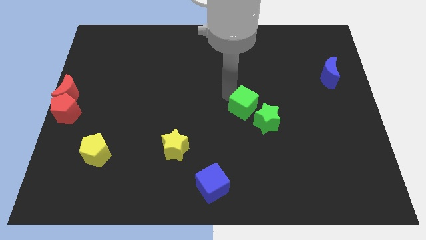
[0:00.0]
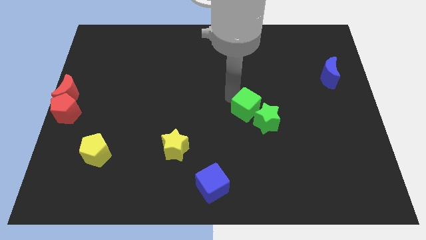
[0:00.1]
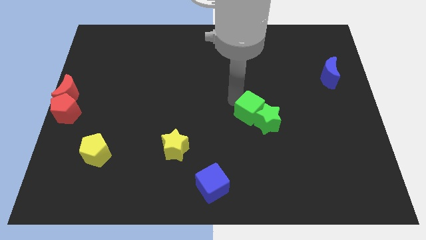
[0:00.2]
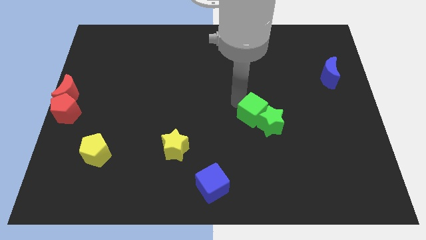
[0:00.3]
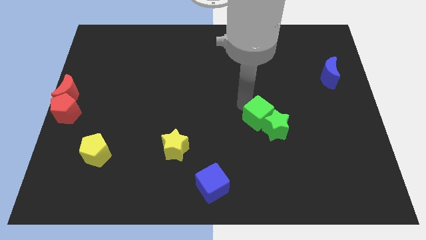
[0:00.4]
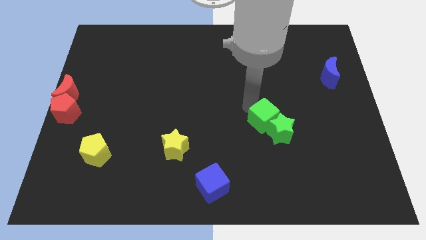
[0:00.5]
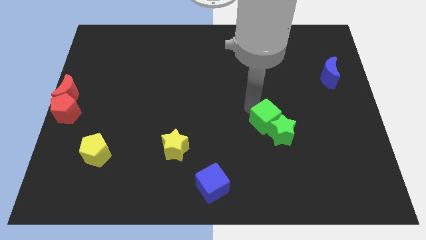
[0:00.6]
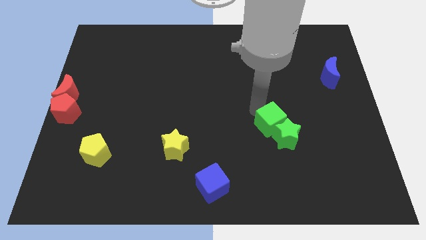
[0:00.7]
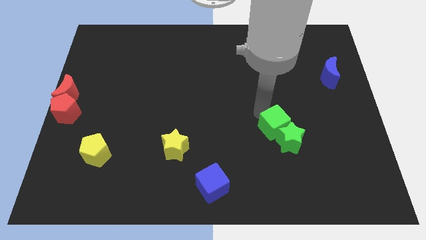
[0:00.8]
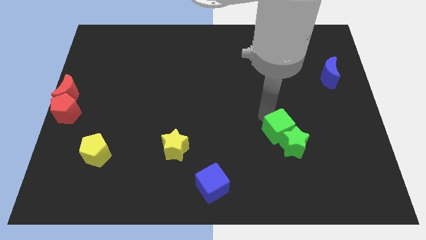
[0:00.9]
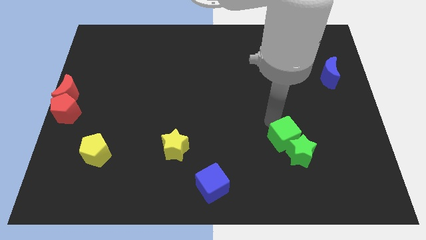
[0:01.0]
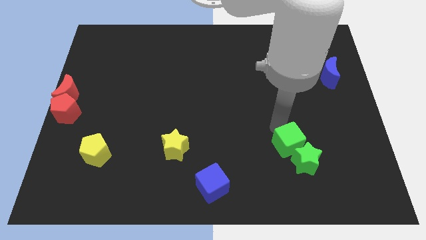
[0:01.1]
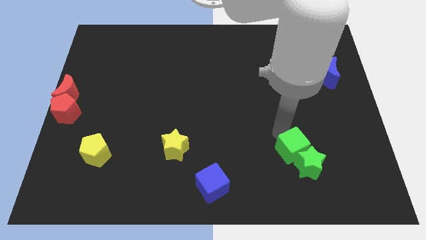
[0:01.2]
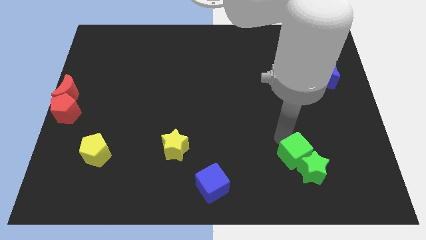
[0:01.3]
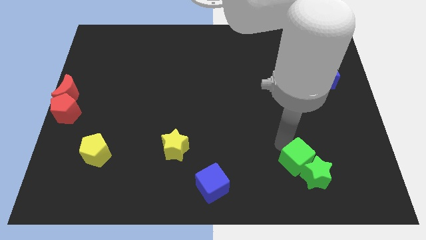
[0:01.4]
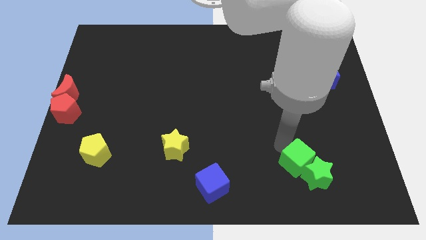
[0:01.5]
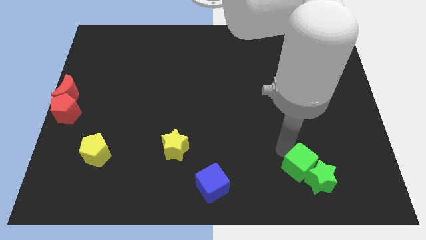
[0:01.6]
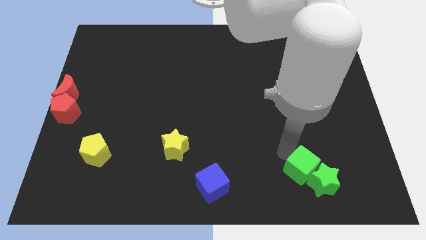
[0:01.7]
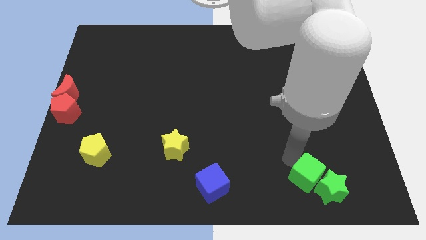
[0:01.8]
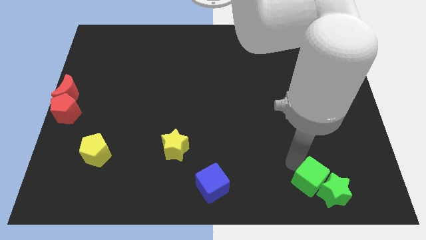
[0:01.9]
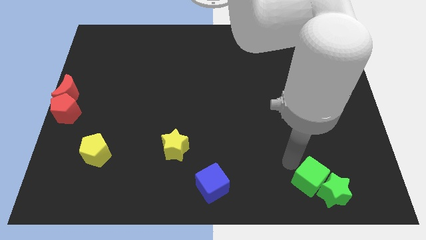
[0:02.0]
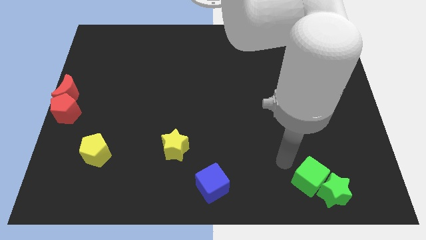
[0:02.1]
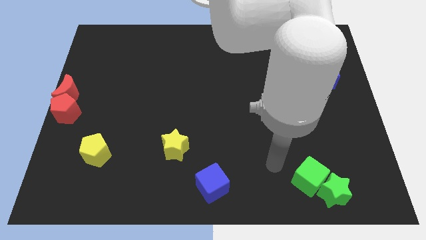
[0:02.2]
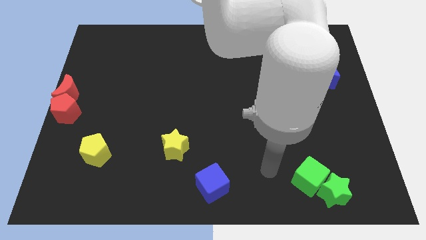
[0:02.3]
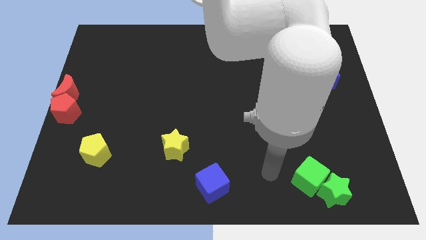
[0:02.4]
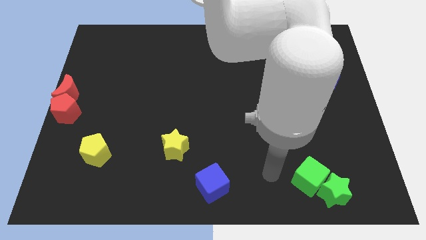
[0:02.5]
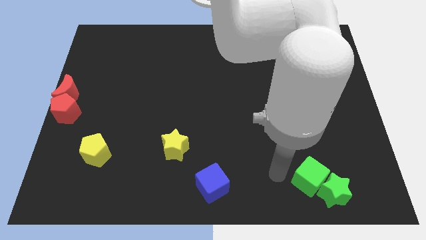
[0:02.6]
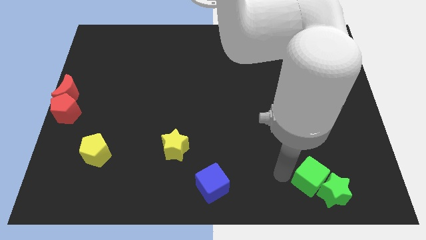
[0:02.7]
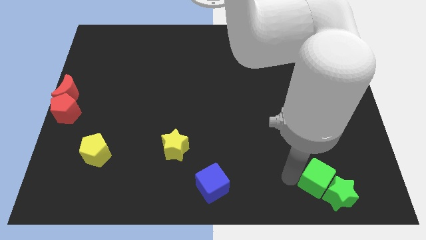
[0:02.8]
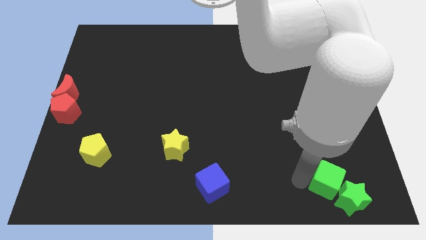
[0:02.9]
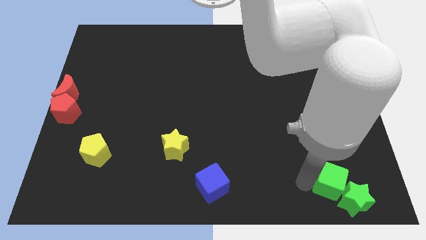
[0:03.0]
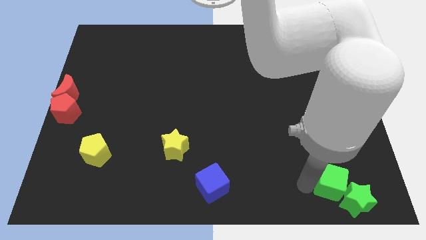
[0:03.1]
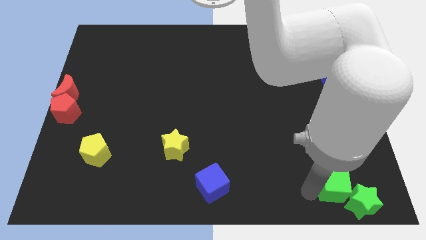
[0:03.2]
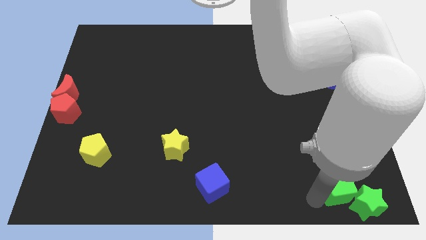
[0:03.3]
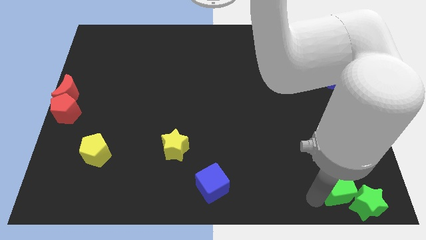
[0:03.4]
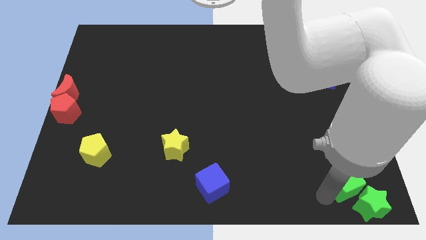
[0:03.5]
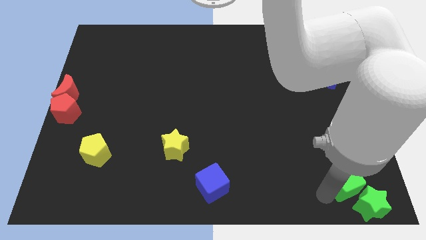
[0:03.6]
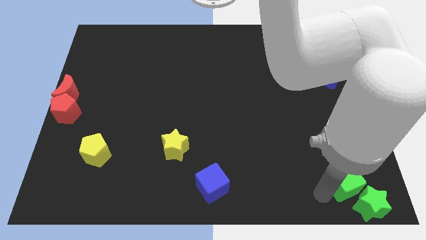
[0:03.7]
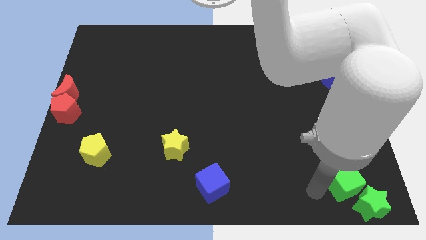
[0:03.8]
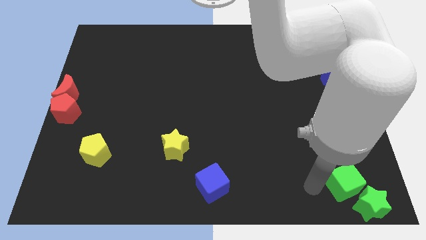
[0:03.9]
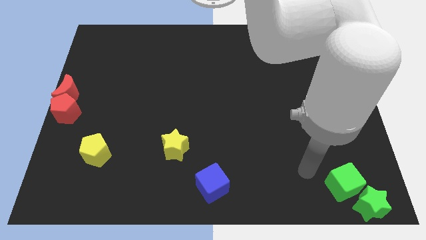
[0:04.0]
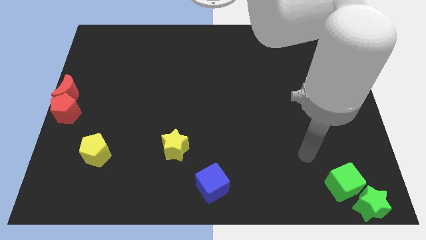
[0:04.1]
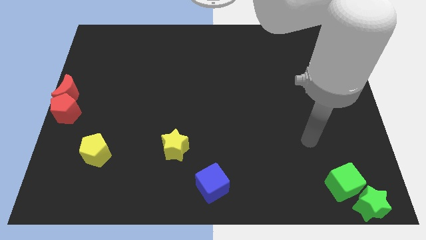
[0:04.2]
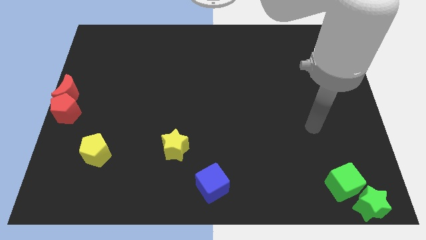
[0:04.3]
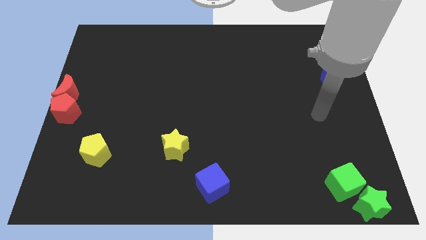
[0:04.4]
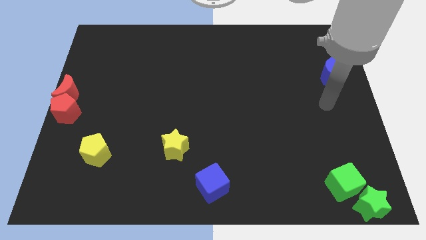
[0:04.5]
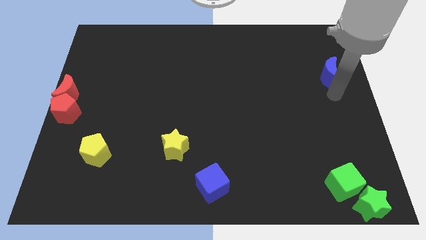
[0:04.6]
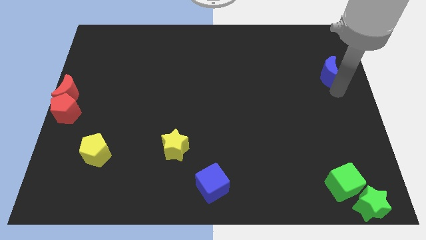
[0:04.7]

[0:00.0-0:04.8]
move the green blocks to the bottom right corner

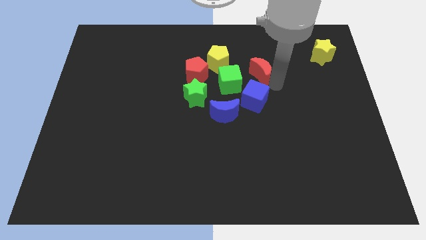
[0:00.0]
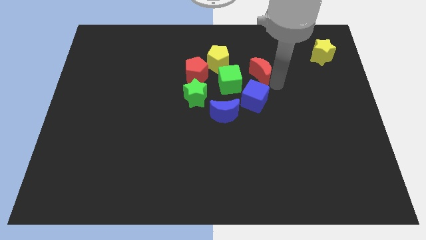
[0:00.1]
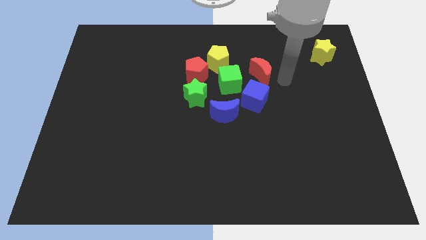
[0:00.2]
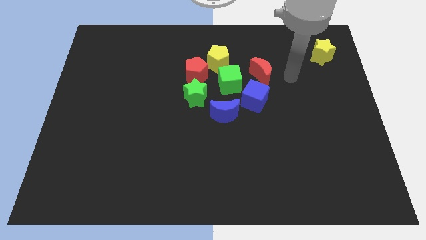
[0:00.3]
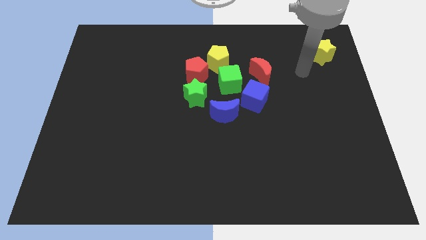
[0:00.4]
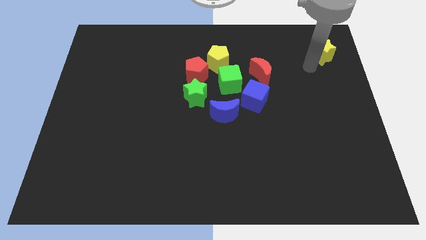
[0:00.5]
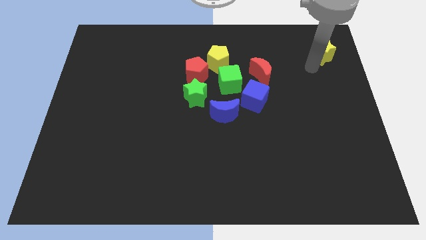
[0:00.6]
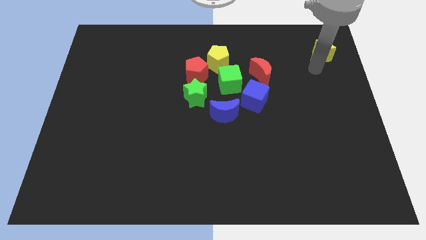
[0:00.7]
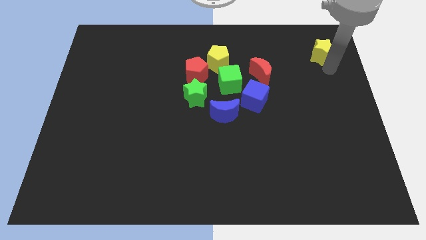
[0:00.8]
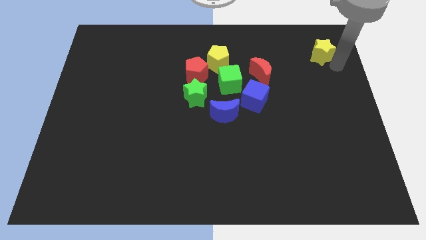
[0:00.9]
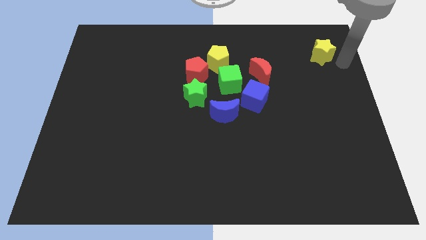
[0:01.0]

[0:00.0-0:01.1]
move your hand away from the red crescent

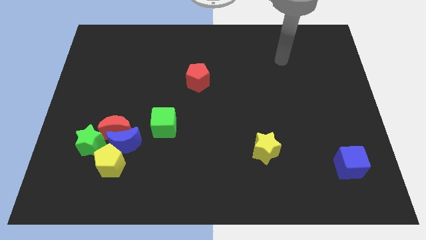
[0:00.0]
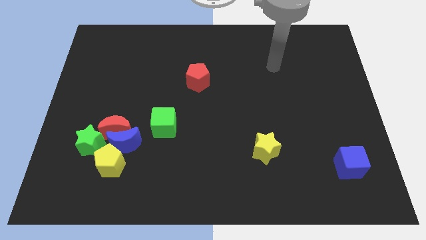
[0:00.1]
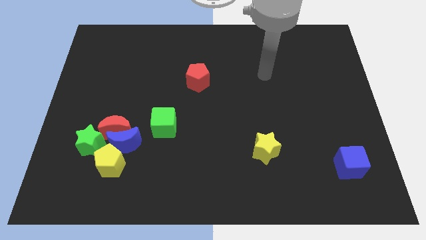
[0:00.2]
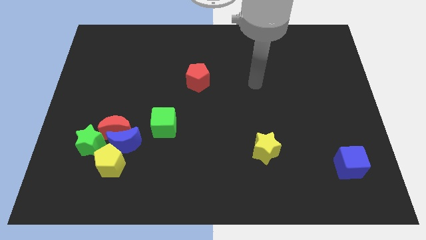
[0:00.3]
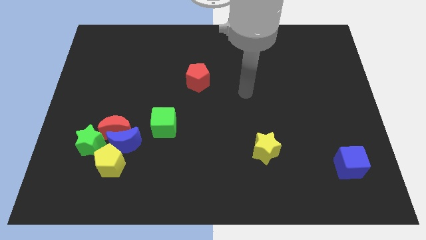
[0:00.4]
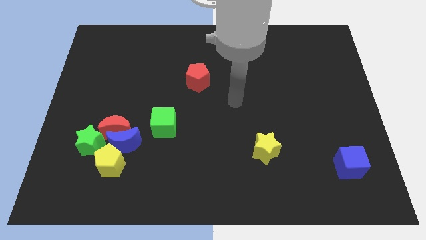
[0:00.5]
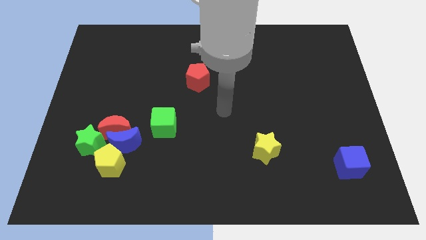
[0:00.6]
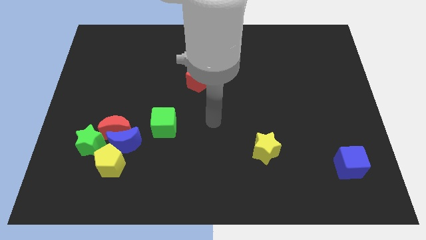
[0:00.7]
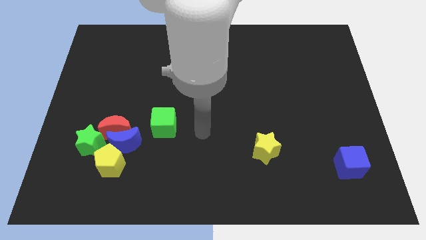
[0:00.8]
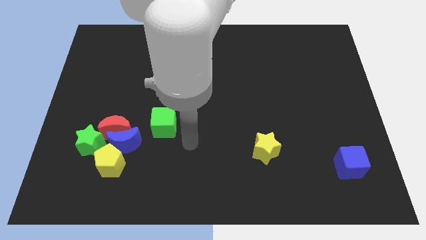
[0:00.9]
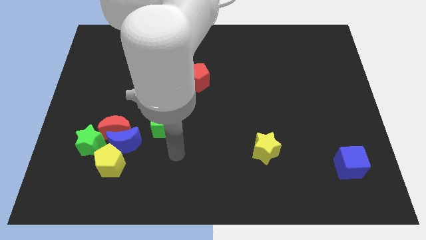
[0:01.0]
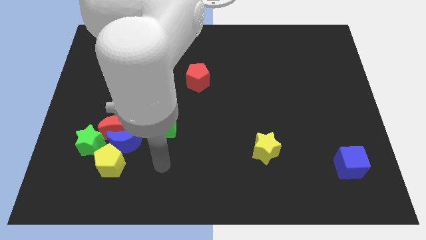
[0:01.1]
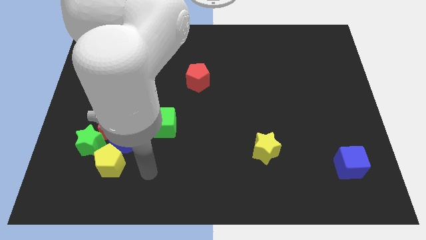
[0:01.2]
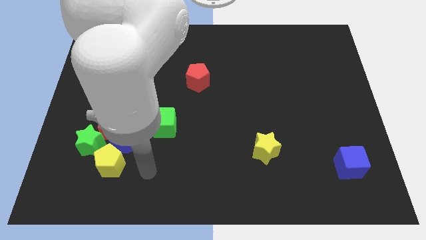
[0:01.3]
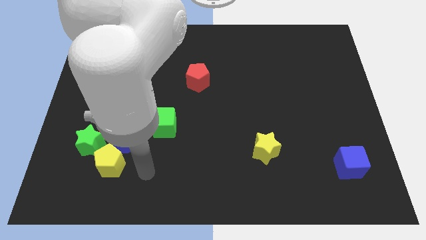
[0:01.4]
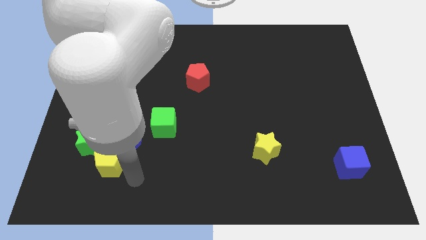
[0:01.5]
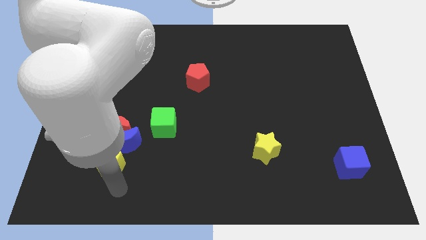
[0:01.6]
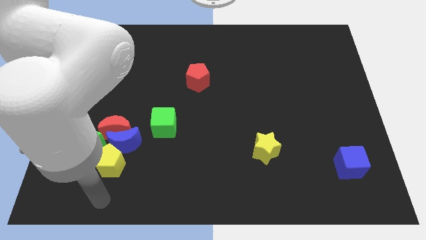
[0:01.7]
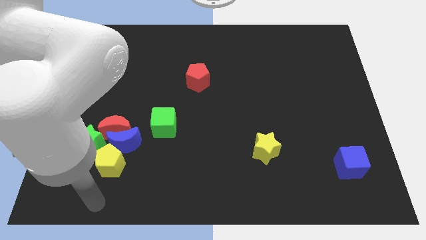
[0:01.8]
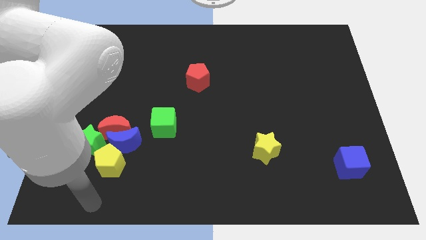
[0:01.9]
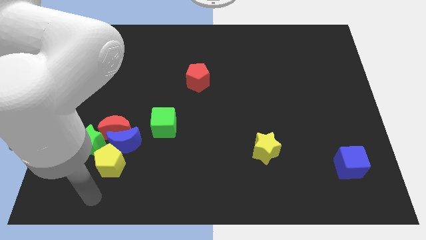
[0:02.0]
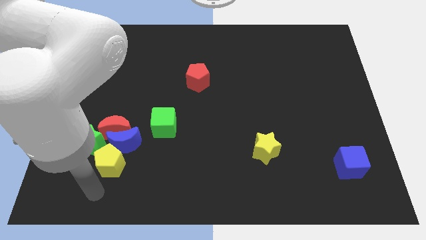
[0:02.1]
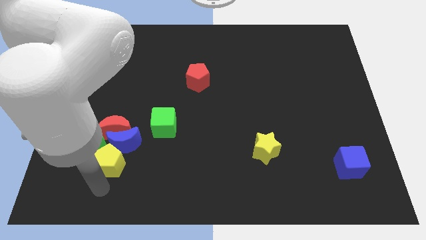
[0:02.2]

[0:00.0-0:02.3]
place the arm under the yellow pentagon

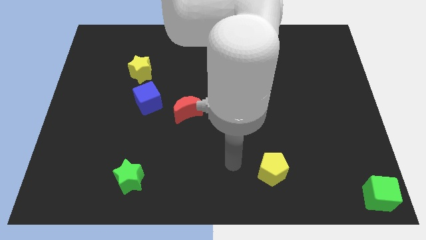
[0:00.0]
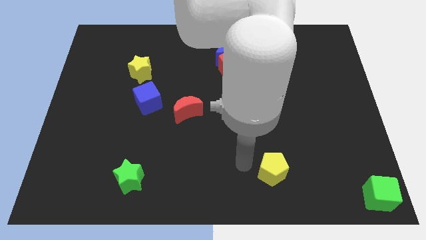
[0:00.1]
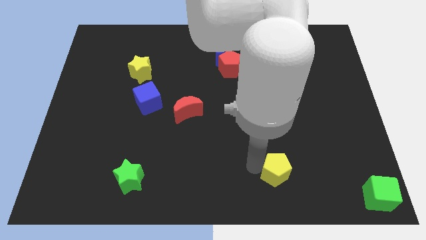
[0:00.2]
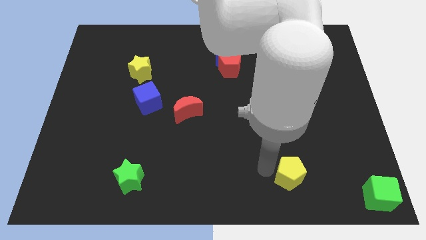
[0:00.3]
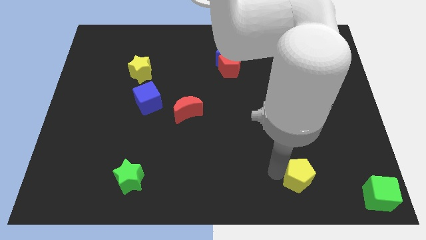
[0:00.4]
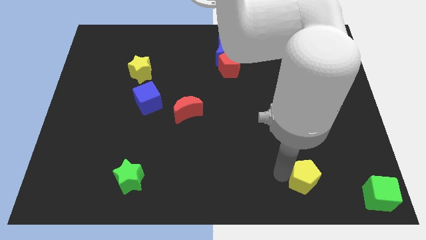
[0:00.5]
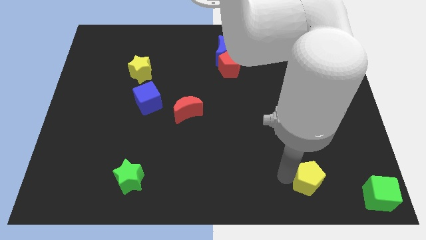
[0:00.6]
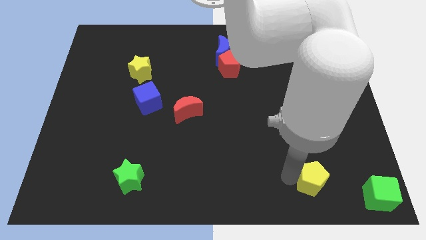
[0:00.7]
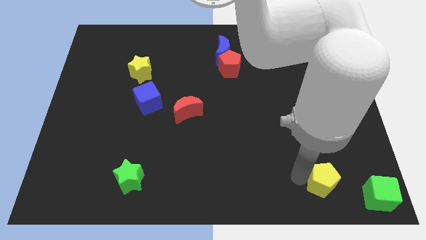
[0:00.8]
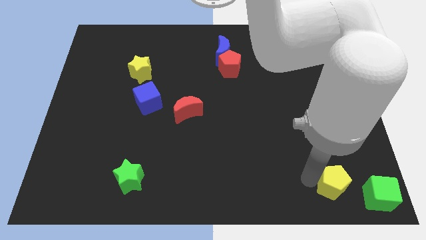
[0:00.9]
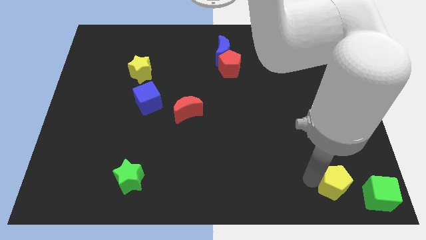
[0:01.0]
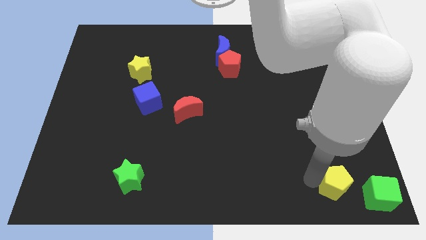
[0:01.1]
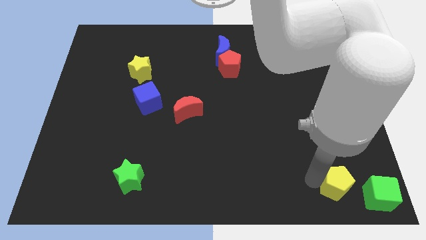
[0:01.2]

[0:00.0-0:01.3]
push the yellow pentagon closer to the green cube
